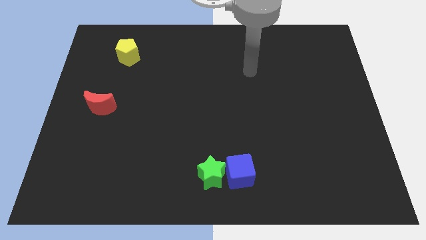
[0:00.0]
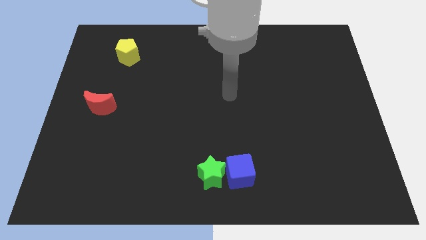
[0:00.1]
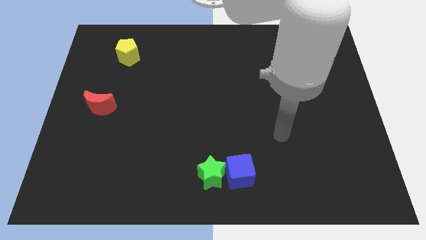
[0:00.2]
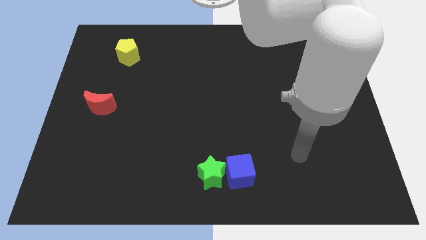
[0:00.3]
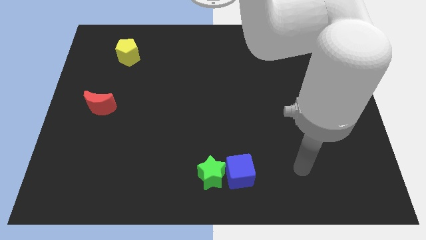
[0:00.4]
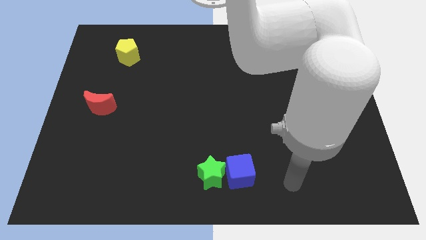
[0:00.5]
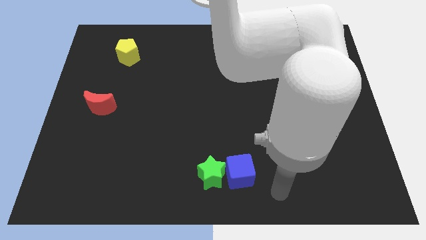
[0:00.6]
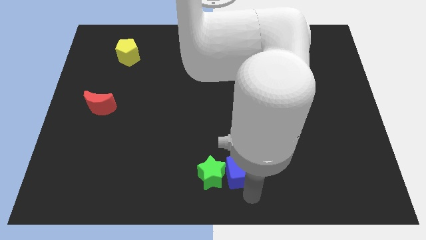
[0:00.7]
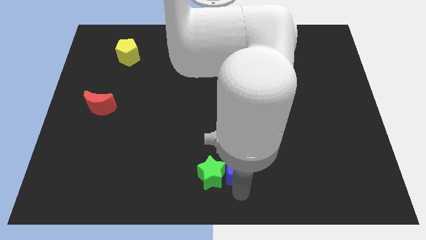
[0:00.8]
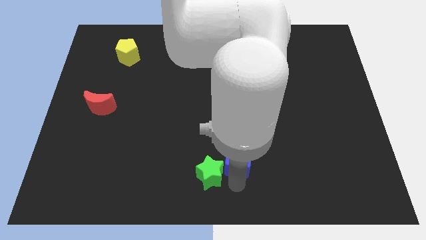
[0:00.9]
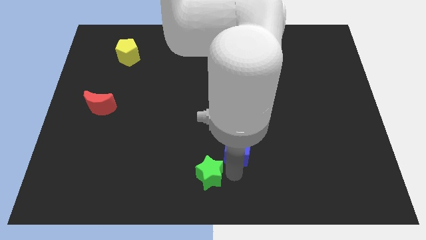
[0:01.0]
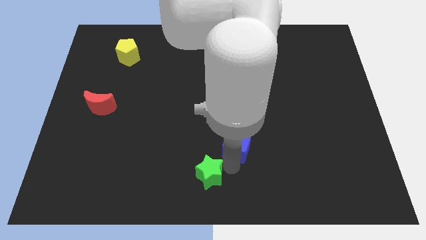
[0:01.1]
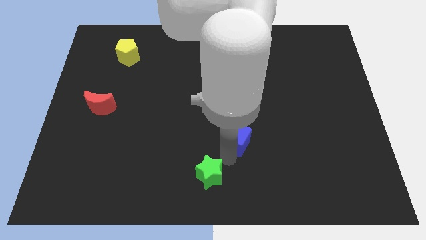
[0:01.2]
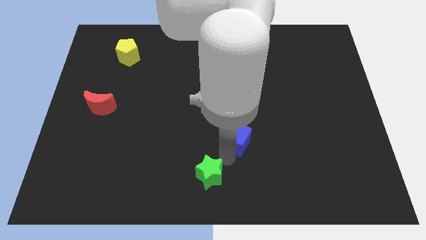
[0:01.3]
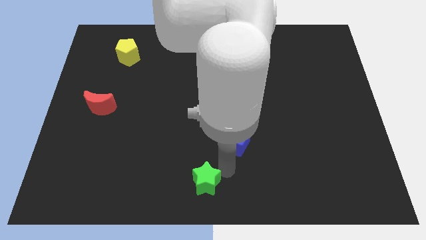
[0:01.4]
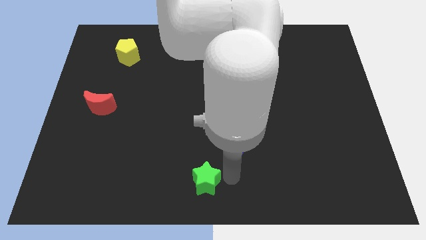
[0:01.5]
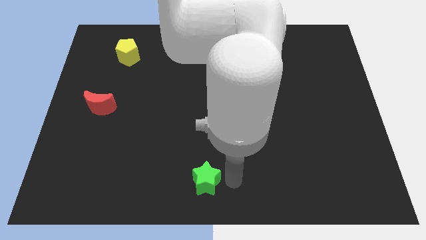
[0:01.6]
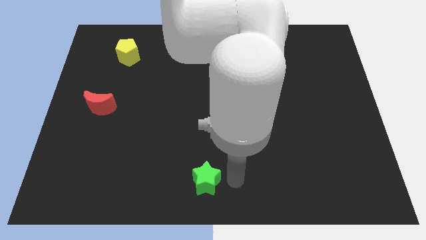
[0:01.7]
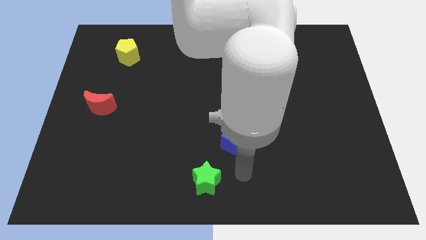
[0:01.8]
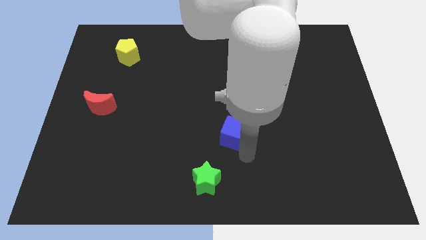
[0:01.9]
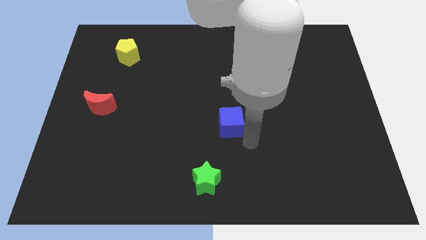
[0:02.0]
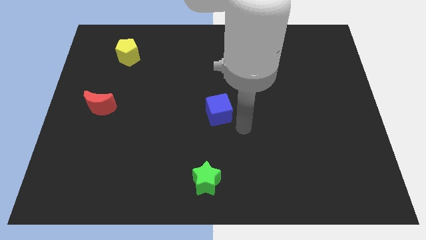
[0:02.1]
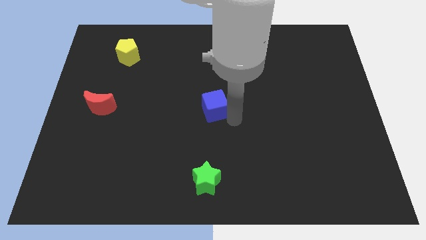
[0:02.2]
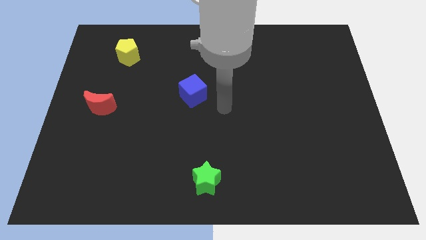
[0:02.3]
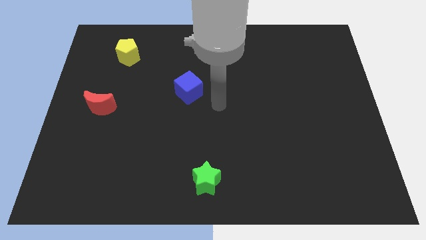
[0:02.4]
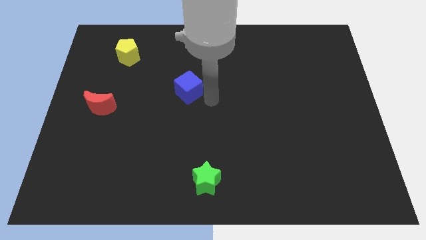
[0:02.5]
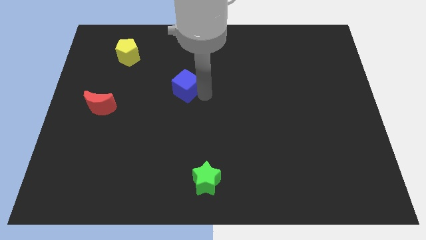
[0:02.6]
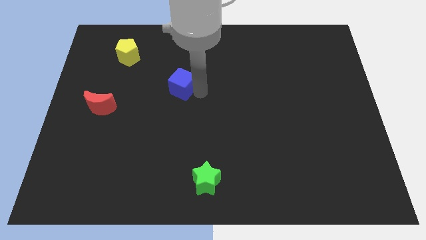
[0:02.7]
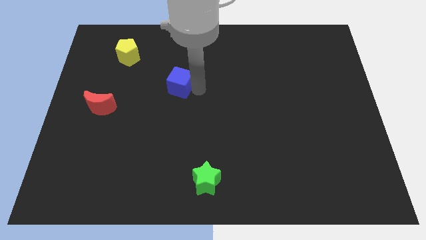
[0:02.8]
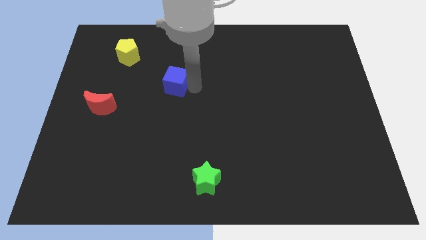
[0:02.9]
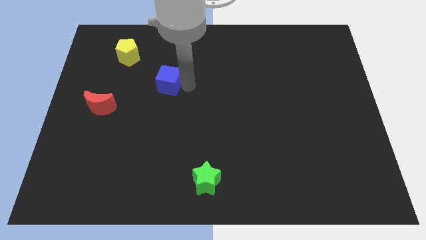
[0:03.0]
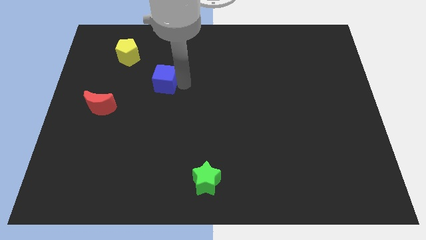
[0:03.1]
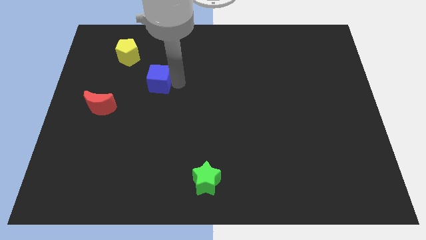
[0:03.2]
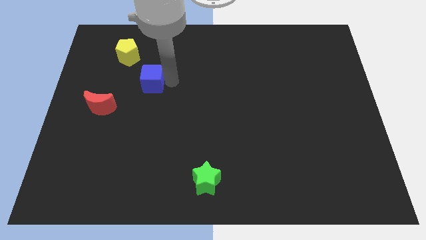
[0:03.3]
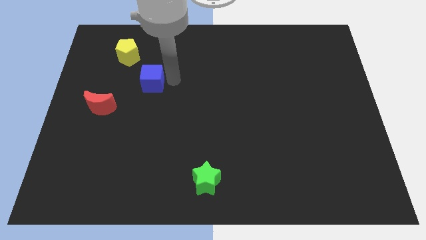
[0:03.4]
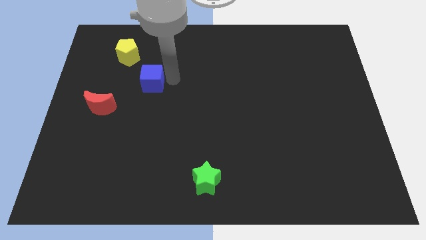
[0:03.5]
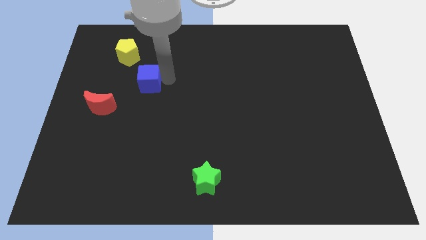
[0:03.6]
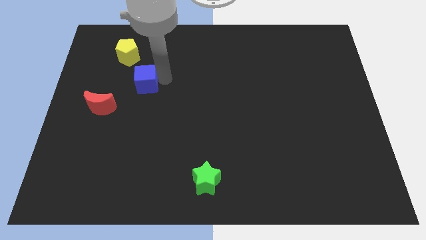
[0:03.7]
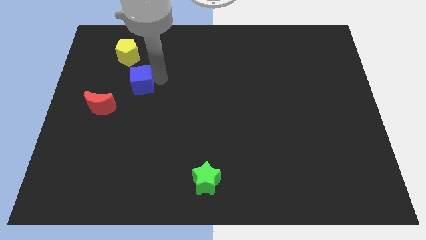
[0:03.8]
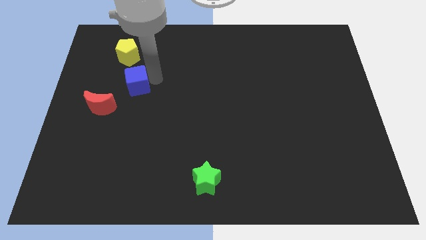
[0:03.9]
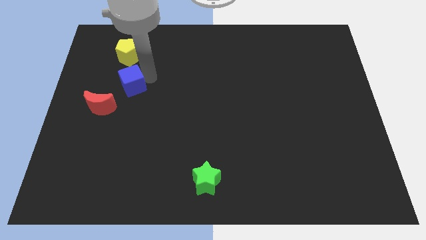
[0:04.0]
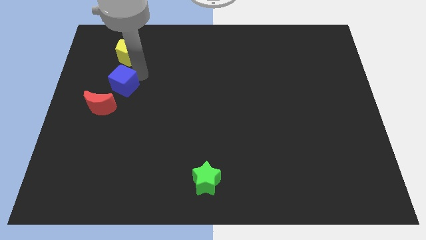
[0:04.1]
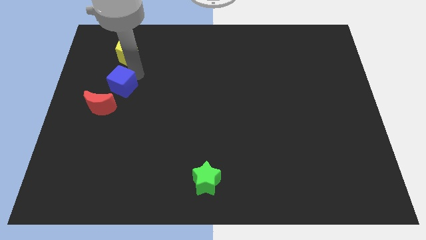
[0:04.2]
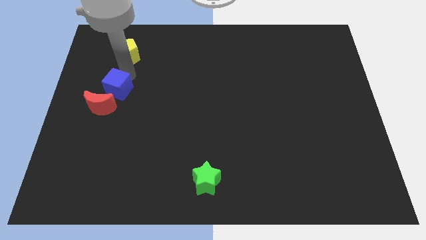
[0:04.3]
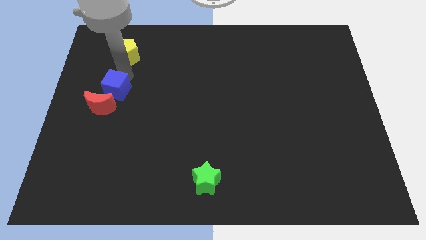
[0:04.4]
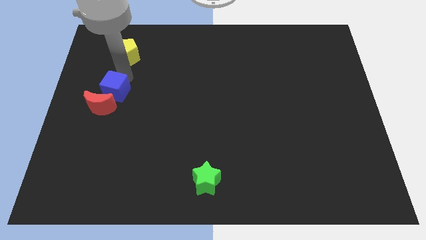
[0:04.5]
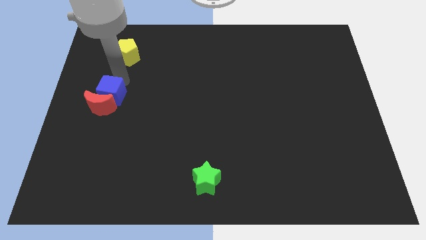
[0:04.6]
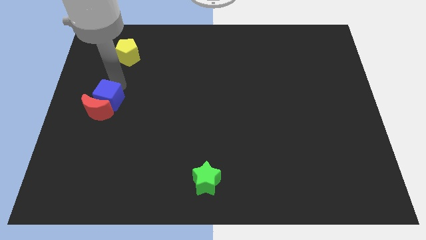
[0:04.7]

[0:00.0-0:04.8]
put the blue cube to the red moon

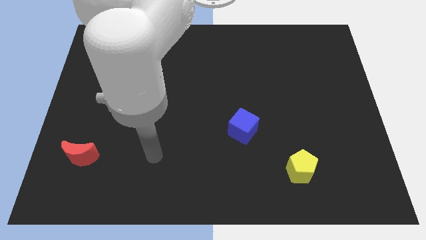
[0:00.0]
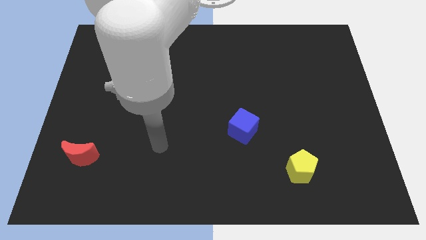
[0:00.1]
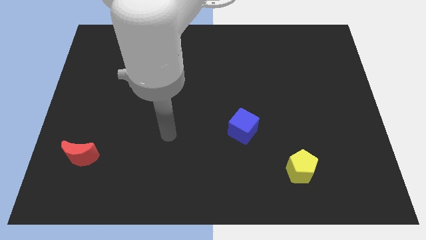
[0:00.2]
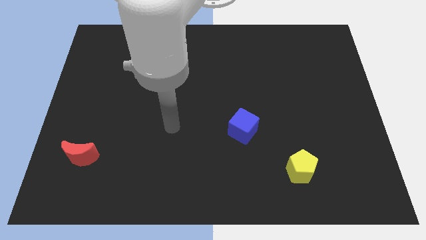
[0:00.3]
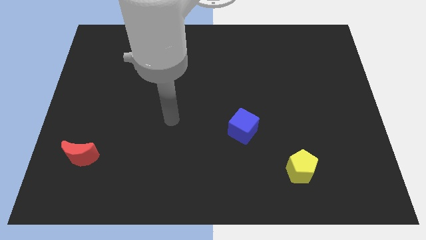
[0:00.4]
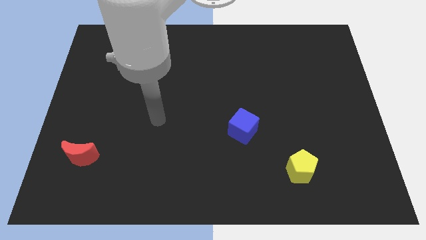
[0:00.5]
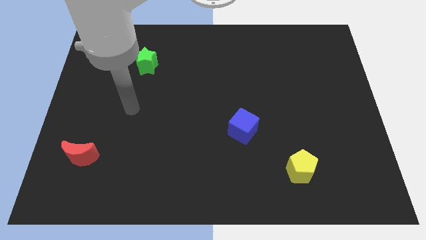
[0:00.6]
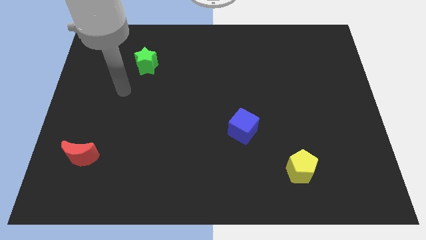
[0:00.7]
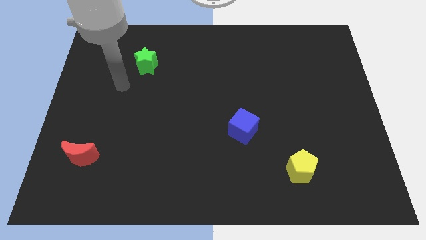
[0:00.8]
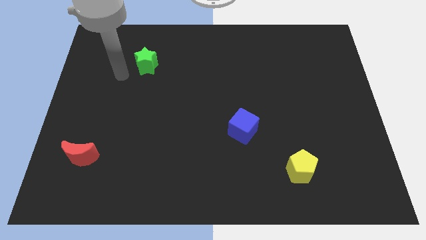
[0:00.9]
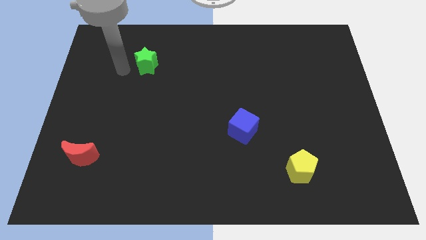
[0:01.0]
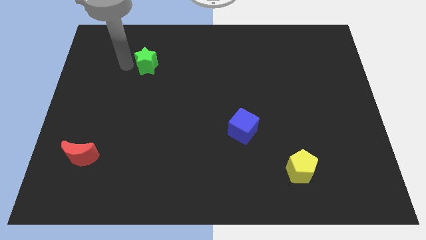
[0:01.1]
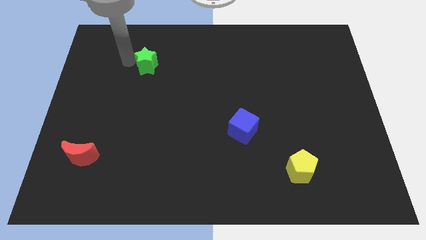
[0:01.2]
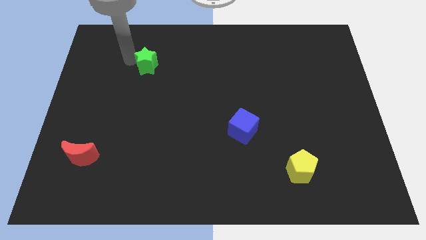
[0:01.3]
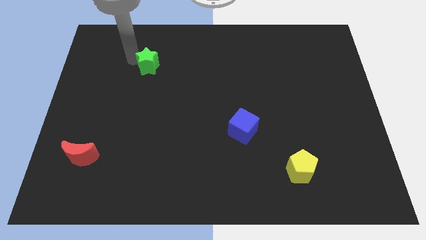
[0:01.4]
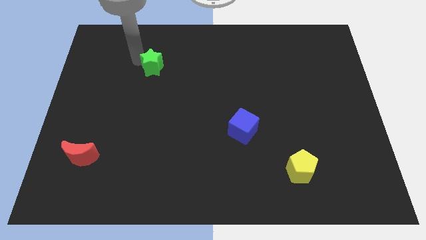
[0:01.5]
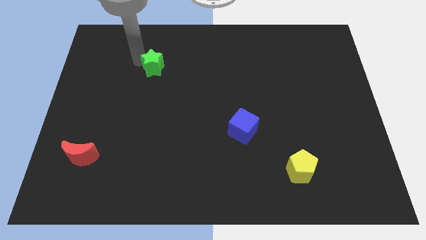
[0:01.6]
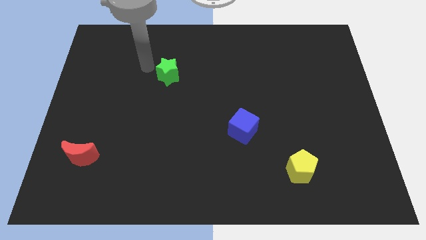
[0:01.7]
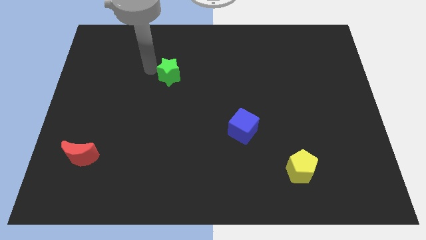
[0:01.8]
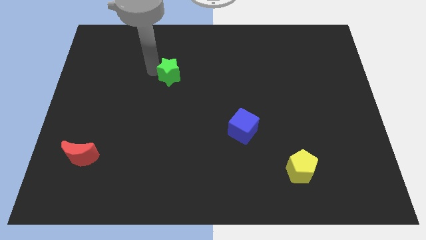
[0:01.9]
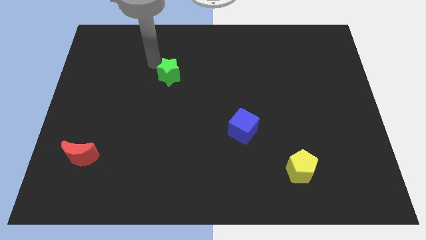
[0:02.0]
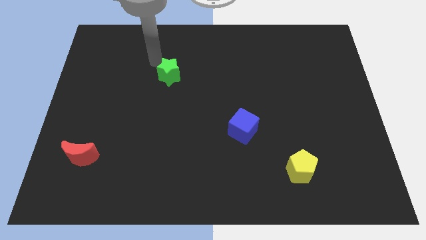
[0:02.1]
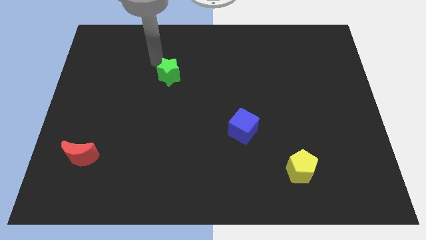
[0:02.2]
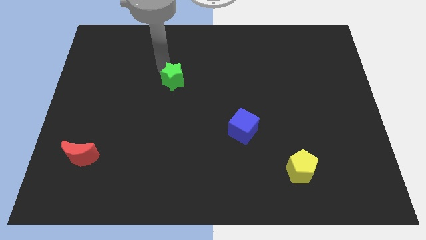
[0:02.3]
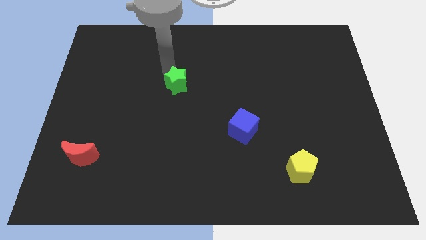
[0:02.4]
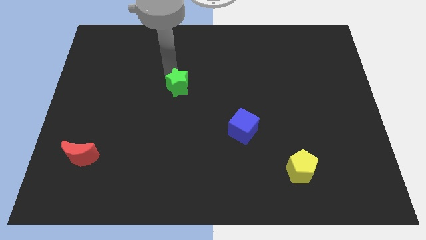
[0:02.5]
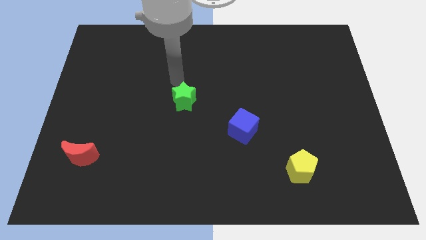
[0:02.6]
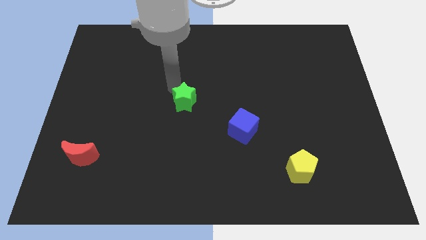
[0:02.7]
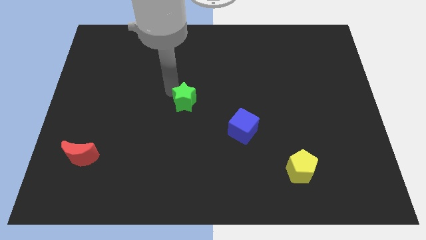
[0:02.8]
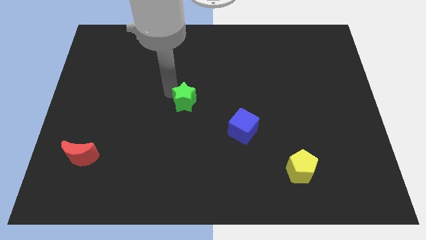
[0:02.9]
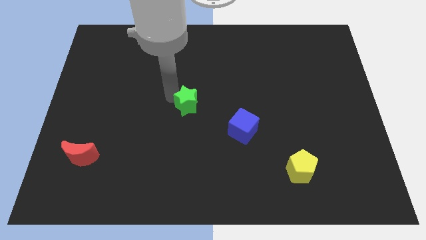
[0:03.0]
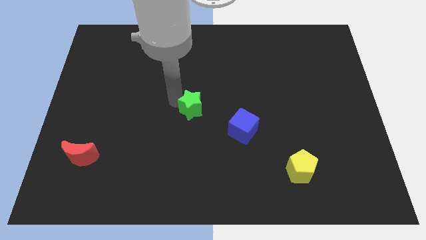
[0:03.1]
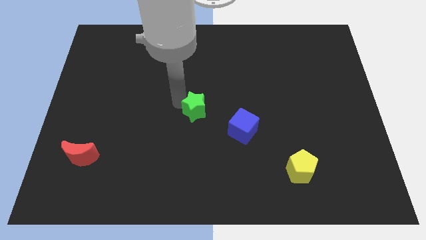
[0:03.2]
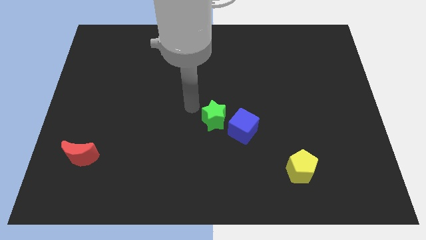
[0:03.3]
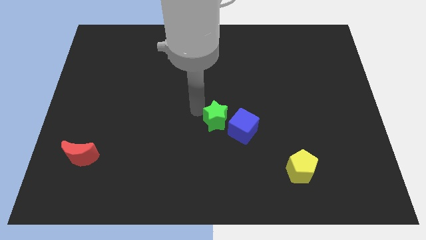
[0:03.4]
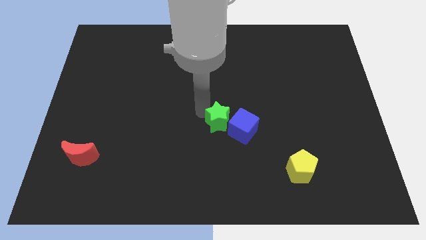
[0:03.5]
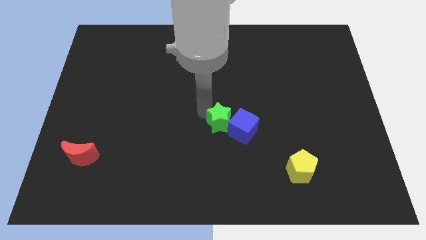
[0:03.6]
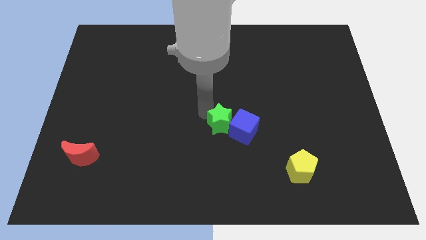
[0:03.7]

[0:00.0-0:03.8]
slide the green block to the cube
